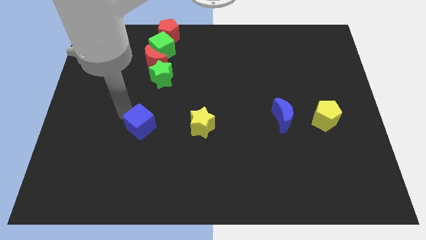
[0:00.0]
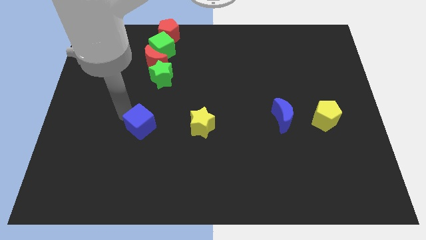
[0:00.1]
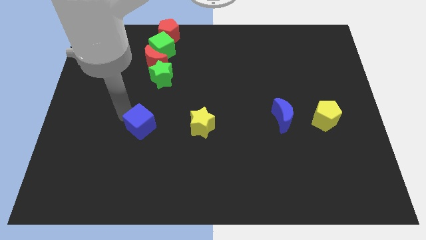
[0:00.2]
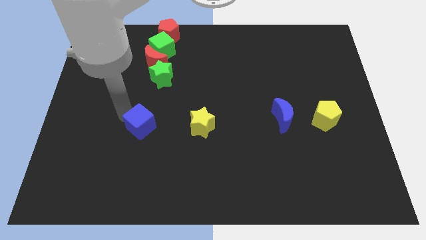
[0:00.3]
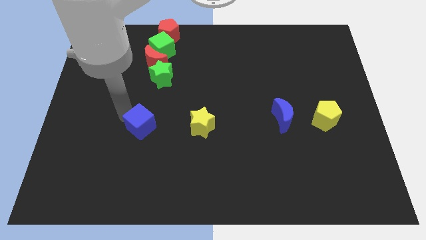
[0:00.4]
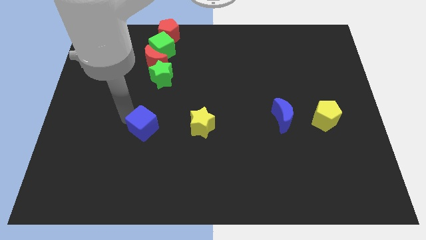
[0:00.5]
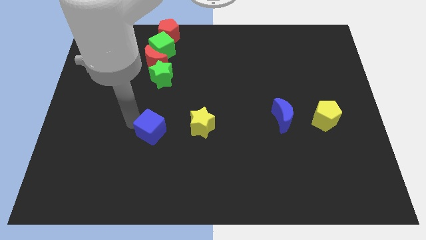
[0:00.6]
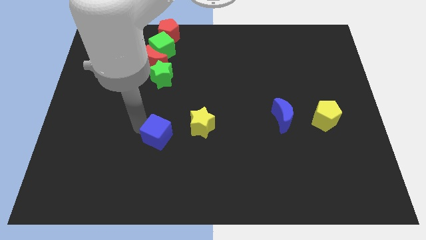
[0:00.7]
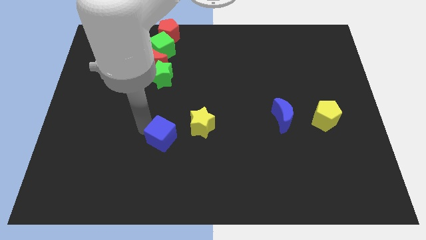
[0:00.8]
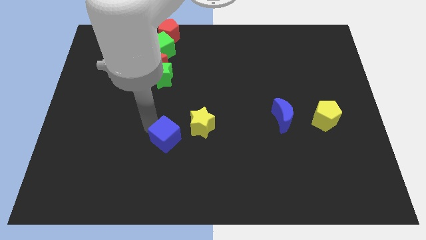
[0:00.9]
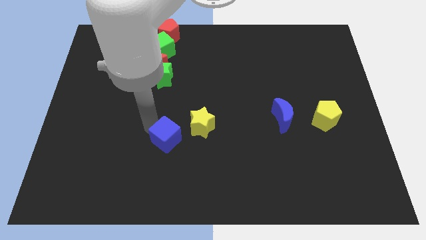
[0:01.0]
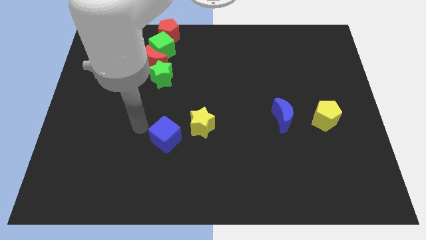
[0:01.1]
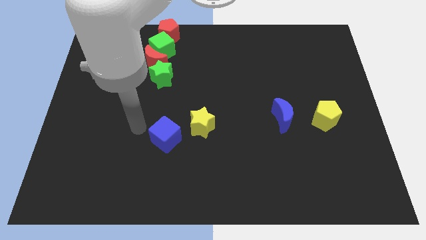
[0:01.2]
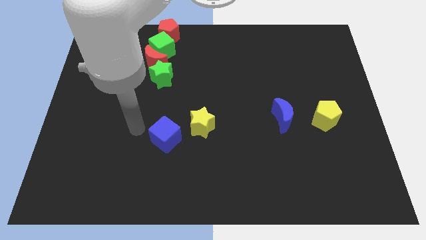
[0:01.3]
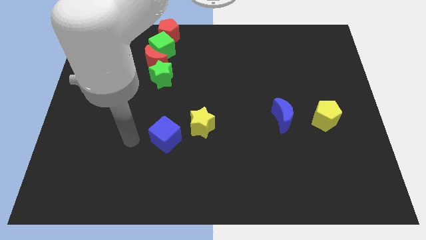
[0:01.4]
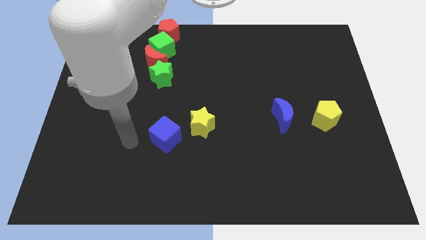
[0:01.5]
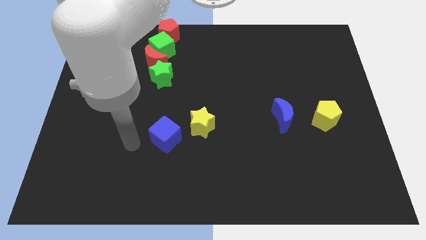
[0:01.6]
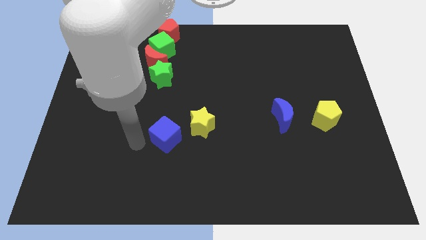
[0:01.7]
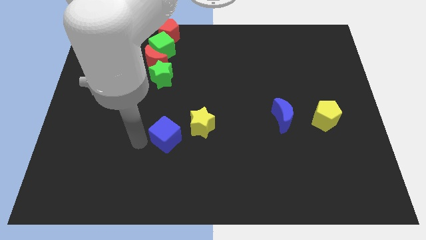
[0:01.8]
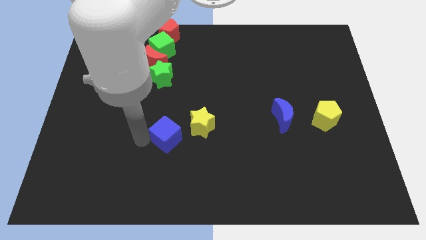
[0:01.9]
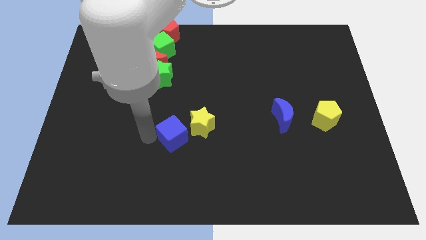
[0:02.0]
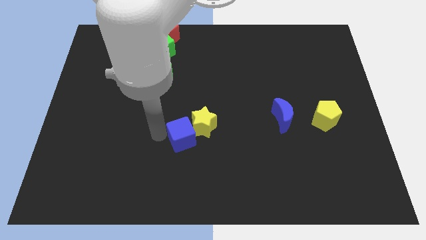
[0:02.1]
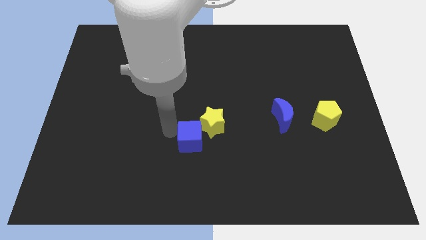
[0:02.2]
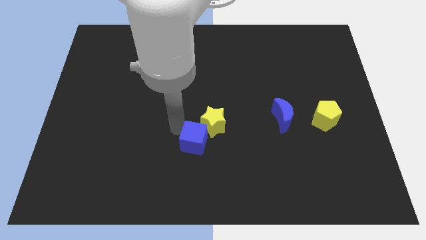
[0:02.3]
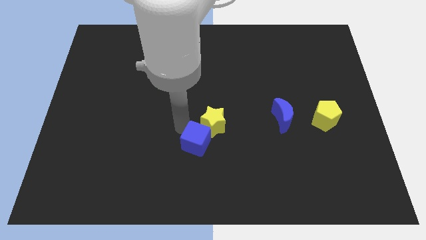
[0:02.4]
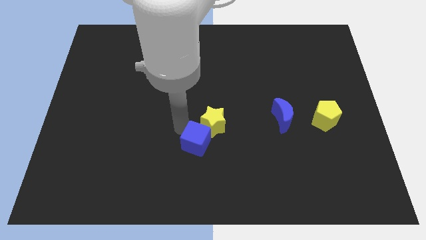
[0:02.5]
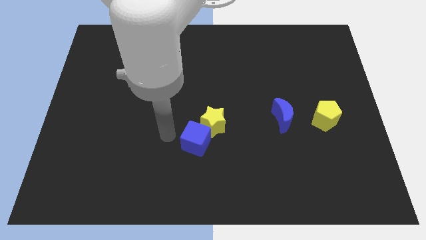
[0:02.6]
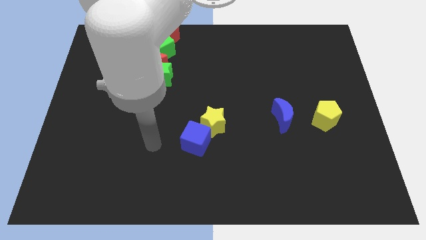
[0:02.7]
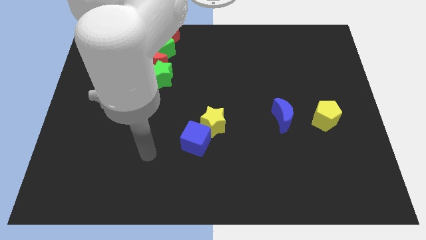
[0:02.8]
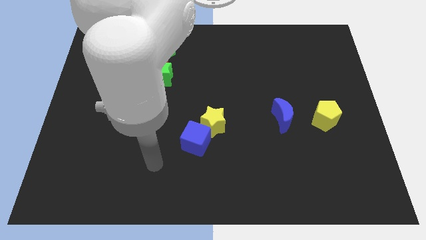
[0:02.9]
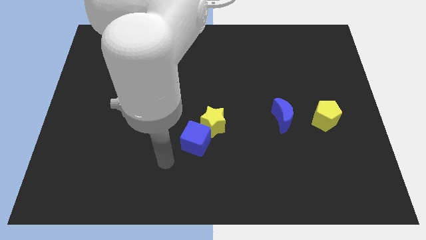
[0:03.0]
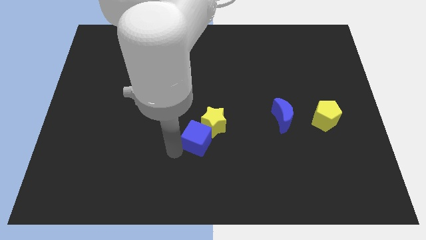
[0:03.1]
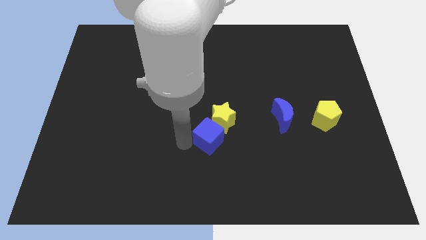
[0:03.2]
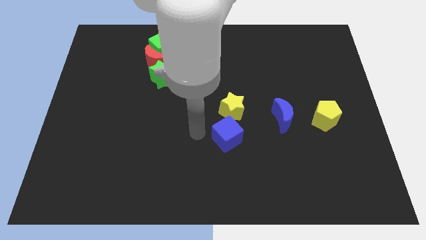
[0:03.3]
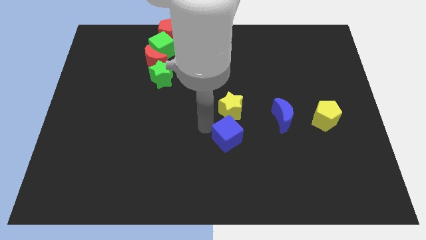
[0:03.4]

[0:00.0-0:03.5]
place blue cube below yellow star

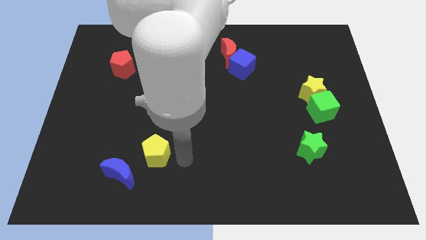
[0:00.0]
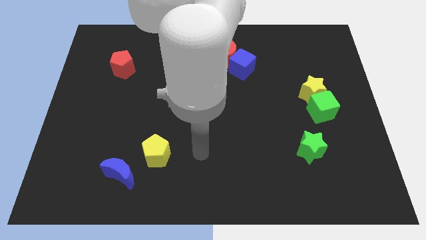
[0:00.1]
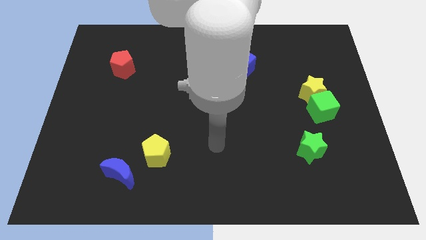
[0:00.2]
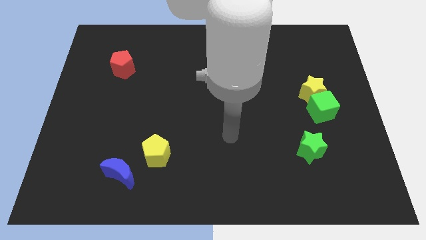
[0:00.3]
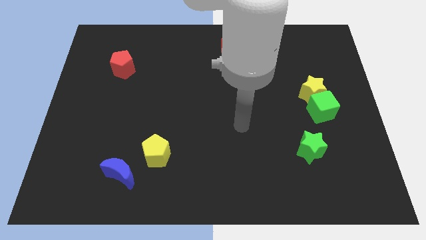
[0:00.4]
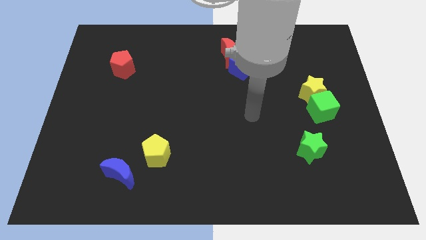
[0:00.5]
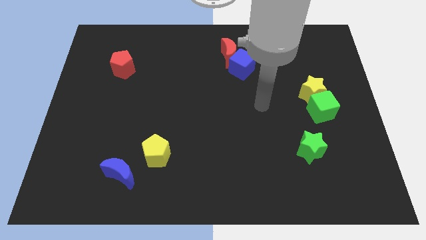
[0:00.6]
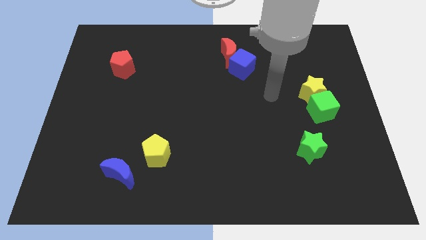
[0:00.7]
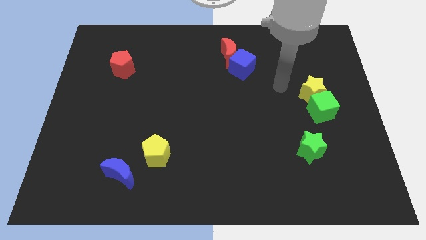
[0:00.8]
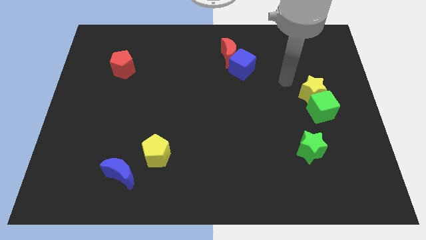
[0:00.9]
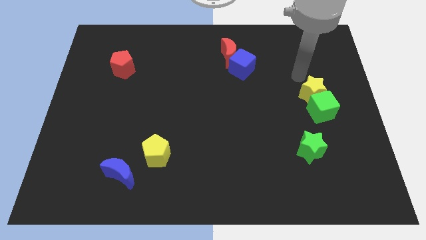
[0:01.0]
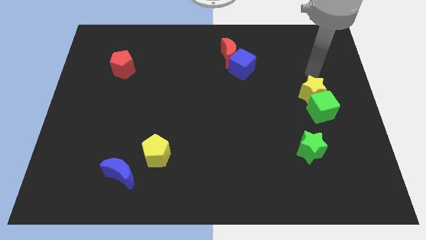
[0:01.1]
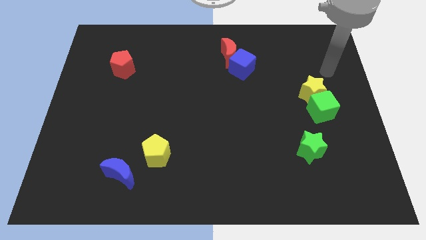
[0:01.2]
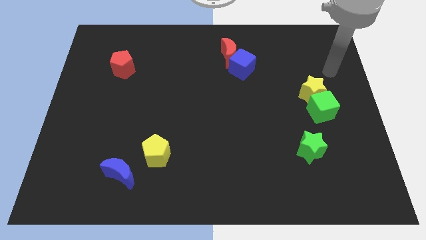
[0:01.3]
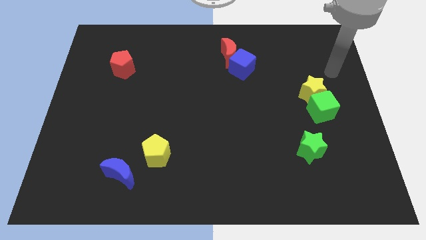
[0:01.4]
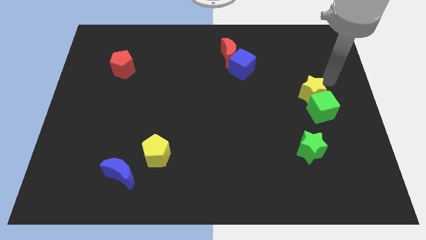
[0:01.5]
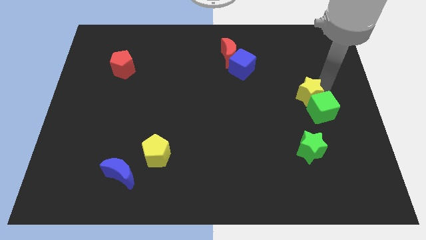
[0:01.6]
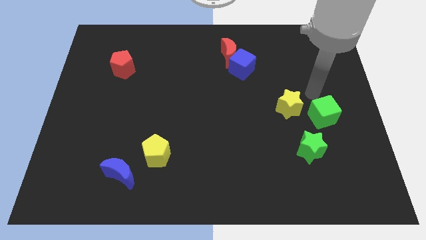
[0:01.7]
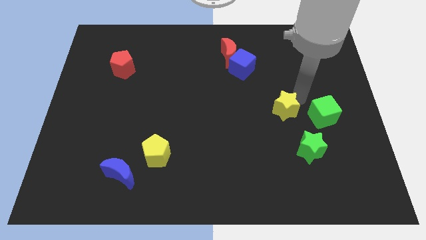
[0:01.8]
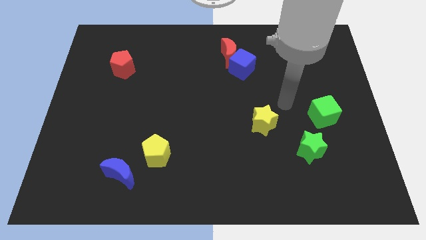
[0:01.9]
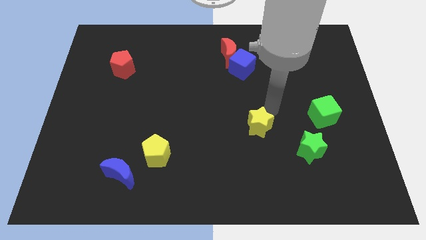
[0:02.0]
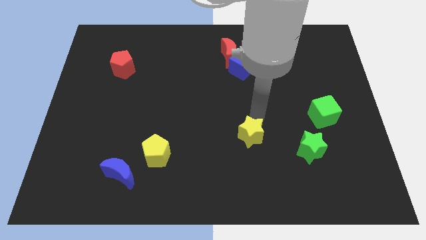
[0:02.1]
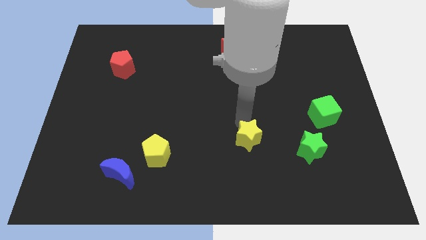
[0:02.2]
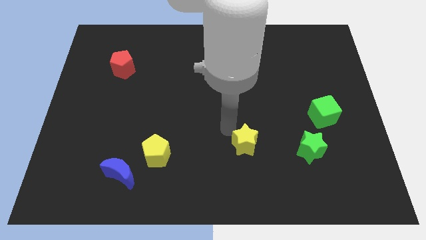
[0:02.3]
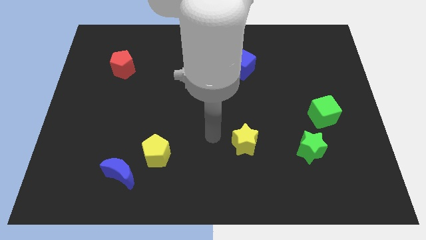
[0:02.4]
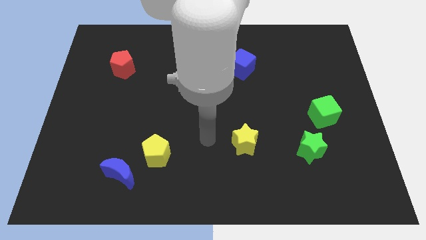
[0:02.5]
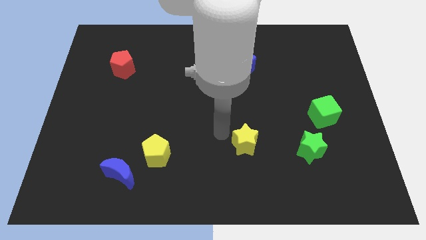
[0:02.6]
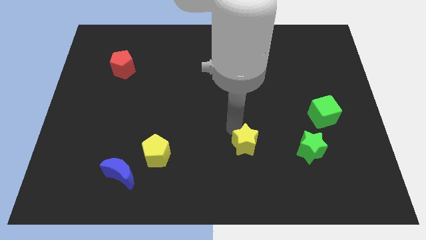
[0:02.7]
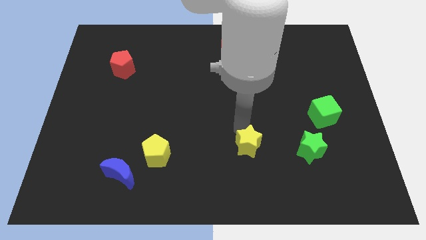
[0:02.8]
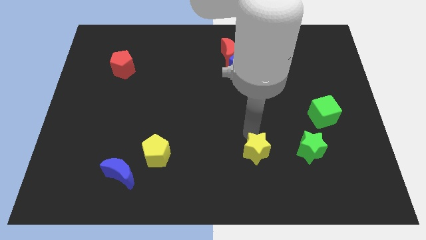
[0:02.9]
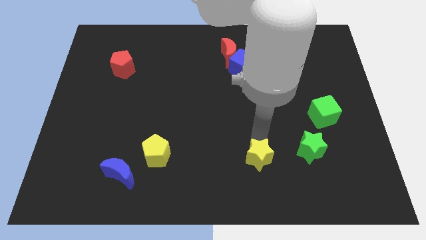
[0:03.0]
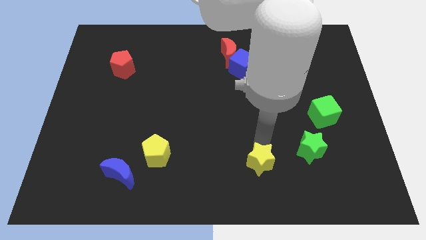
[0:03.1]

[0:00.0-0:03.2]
move the yellow star to the left of the green star

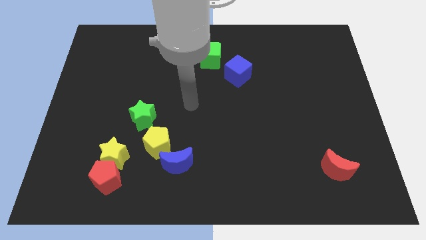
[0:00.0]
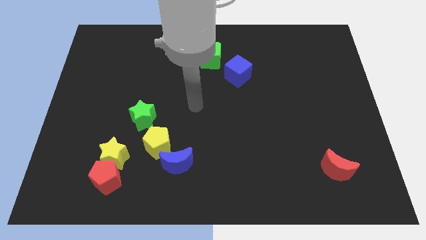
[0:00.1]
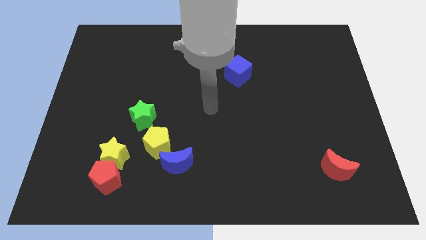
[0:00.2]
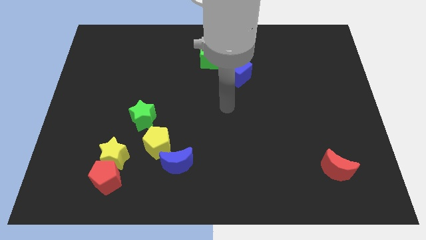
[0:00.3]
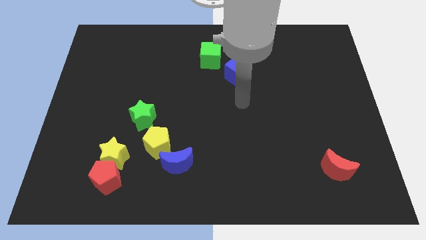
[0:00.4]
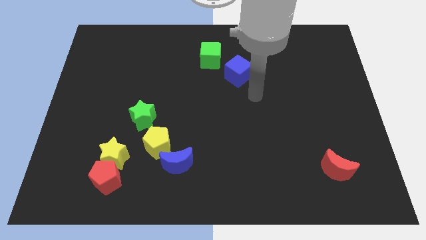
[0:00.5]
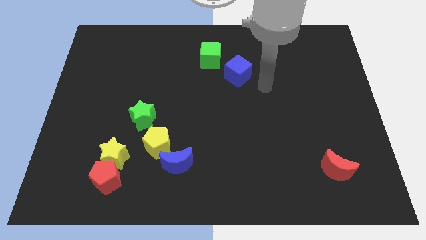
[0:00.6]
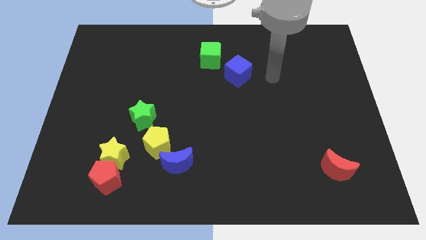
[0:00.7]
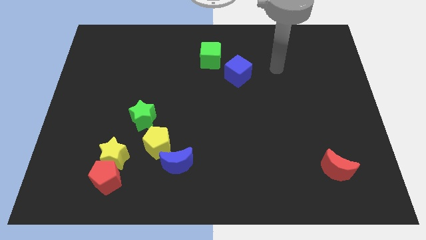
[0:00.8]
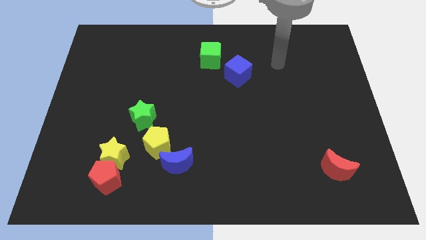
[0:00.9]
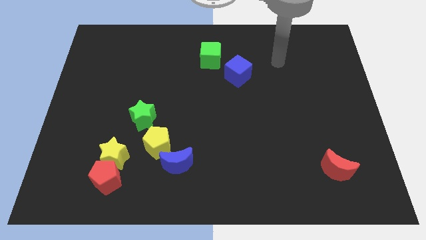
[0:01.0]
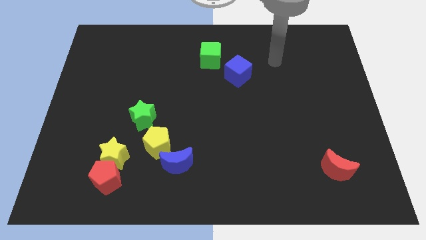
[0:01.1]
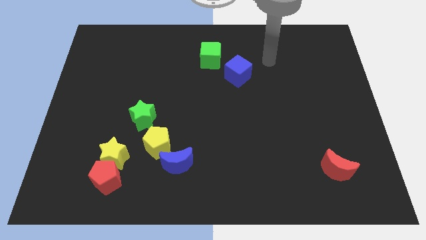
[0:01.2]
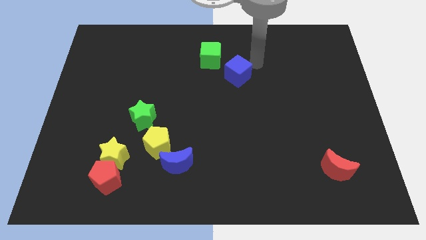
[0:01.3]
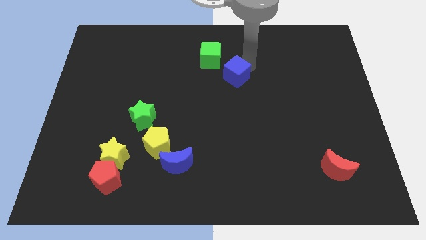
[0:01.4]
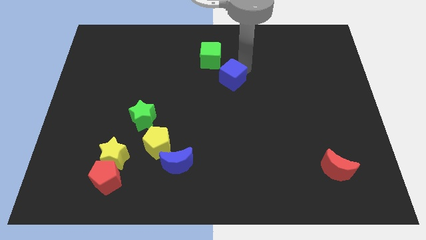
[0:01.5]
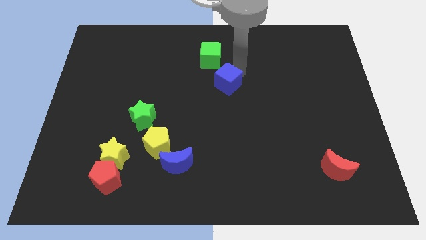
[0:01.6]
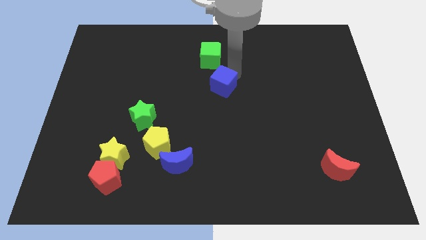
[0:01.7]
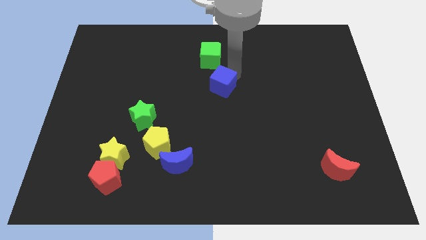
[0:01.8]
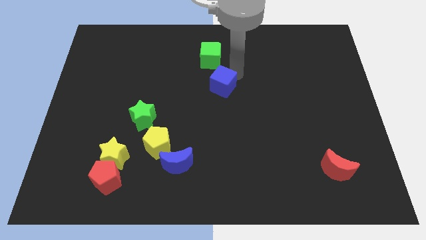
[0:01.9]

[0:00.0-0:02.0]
place the blue cube diagonally to the top right of the yellow pentagon

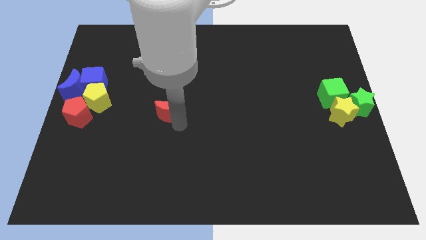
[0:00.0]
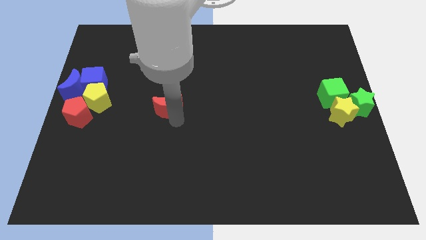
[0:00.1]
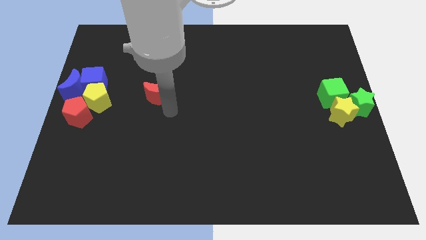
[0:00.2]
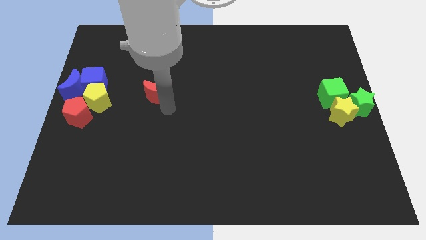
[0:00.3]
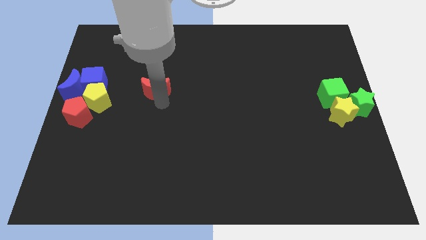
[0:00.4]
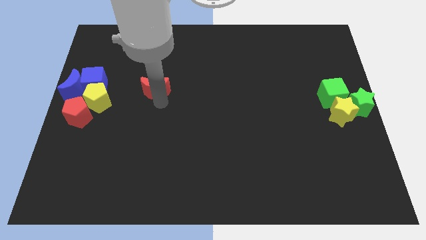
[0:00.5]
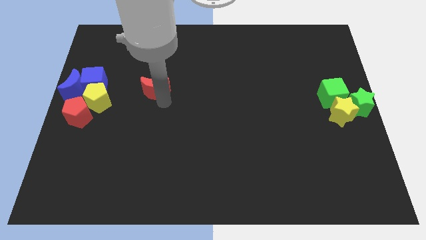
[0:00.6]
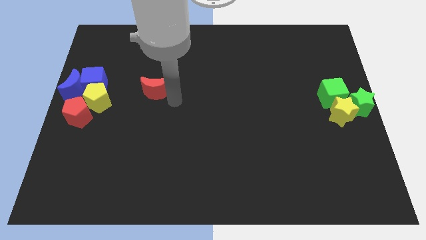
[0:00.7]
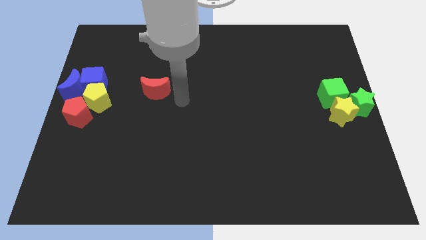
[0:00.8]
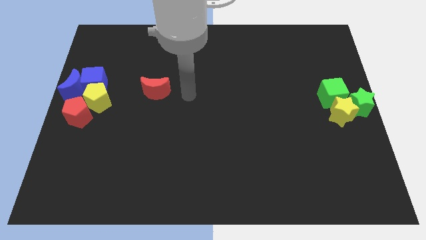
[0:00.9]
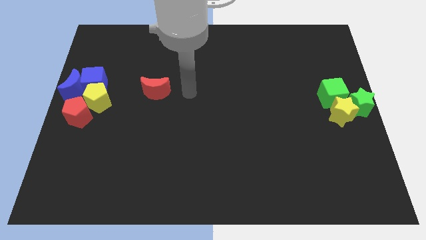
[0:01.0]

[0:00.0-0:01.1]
push the red crescent towards the right of the blue cube
